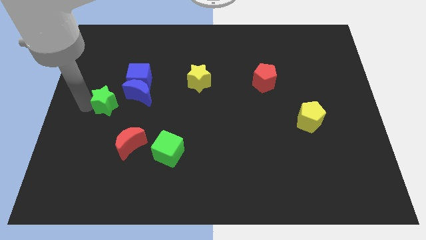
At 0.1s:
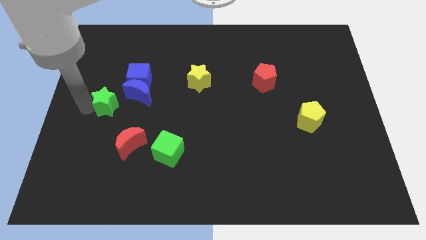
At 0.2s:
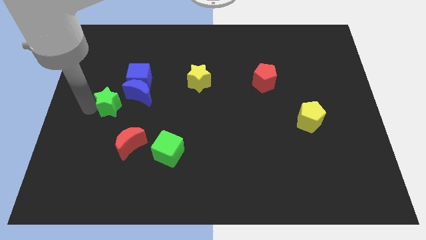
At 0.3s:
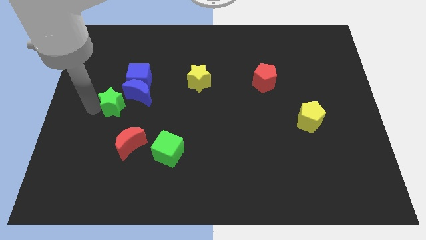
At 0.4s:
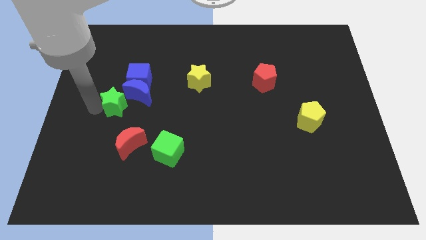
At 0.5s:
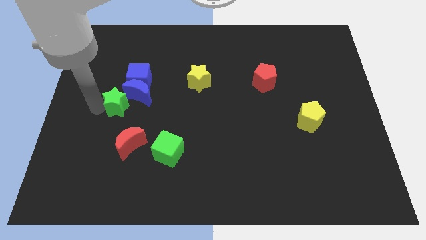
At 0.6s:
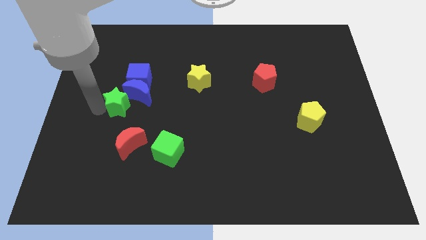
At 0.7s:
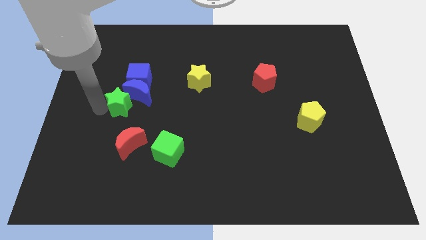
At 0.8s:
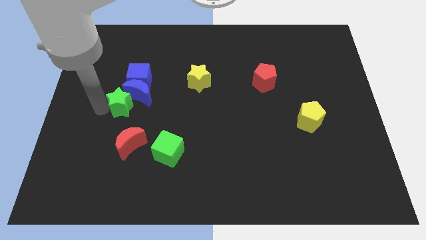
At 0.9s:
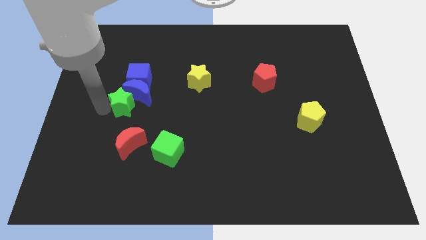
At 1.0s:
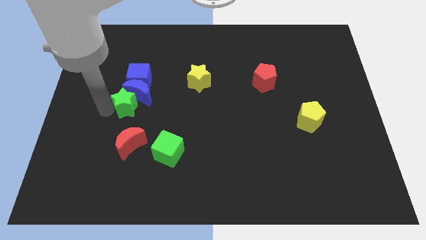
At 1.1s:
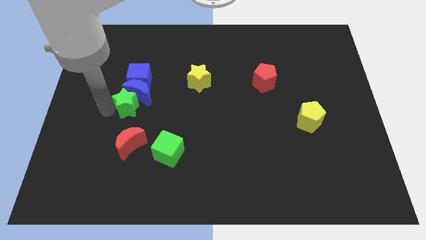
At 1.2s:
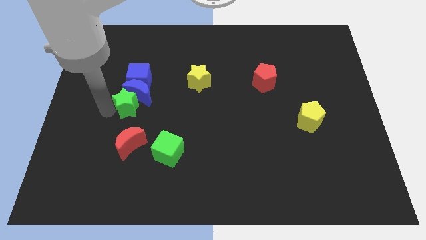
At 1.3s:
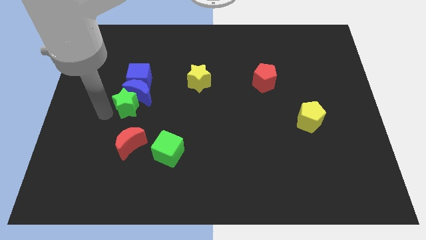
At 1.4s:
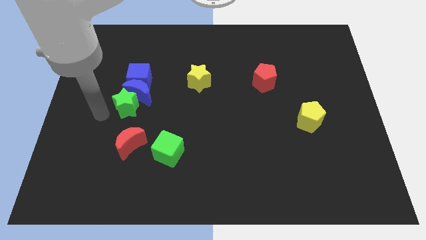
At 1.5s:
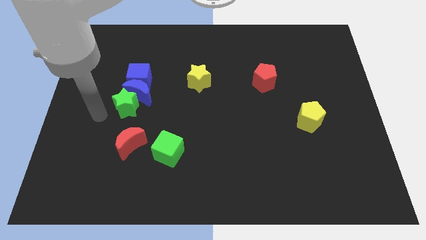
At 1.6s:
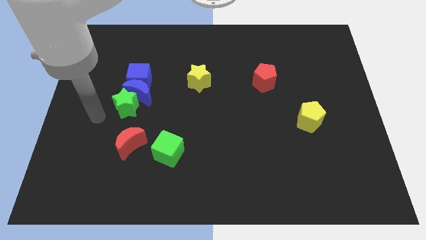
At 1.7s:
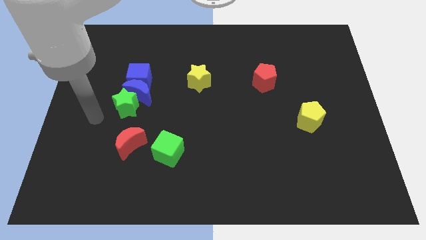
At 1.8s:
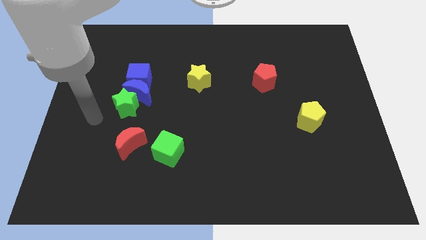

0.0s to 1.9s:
place the green star below the blue crescent

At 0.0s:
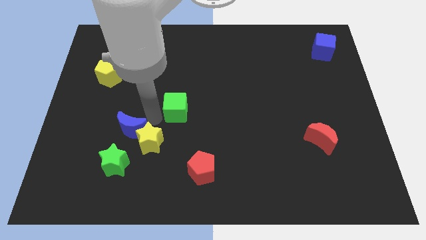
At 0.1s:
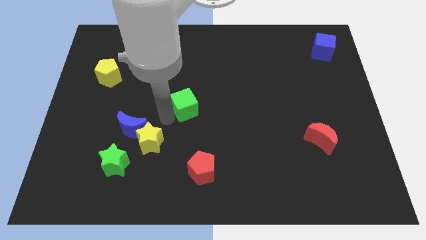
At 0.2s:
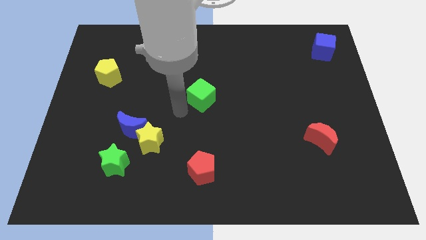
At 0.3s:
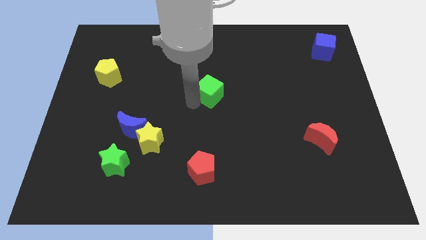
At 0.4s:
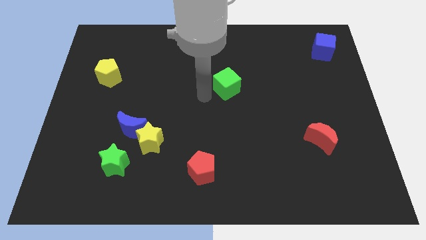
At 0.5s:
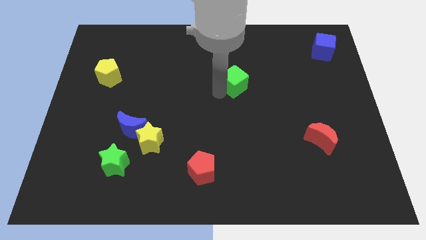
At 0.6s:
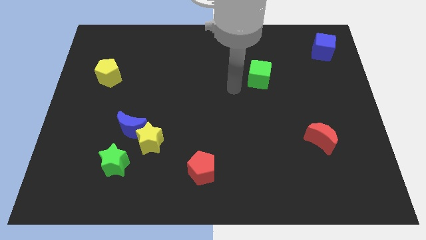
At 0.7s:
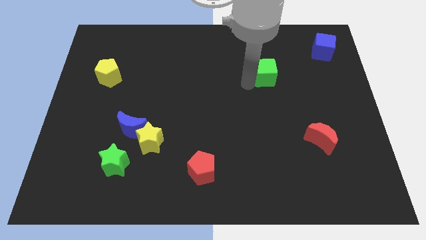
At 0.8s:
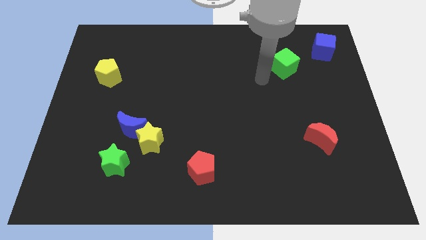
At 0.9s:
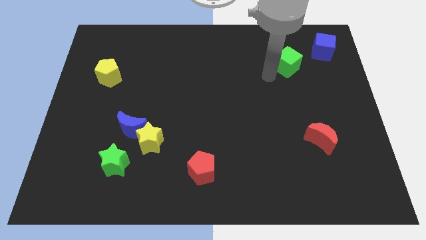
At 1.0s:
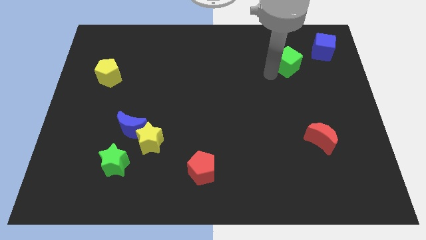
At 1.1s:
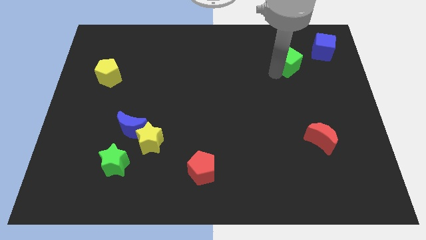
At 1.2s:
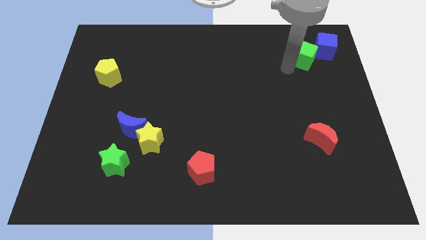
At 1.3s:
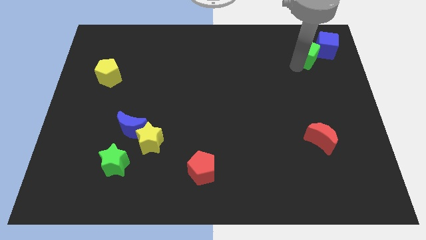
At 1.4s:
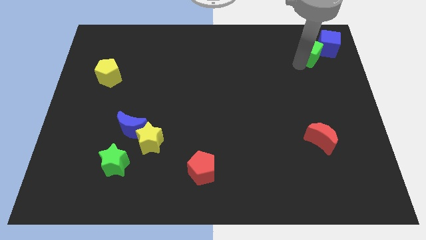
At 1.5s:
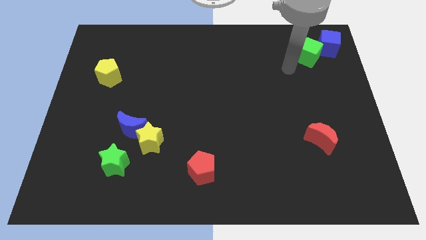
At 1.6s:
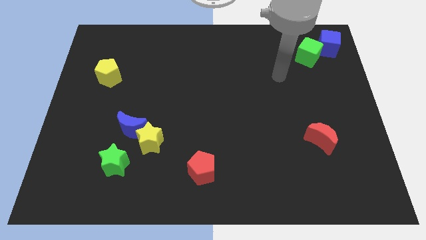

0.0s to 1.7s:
move the green cube to the top right of the board

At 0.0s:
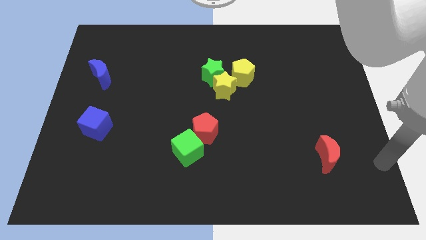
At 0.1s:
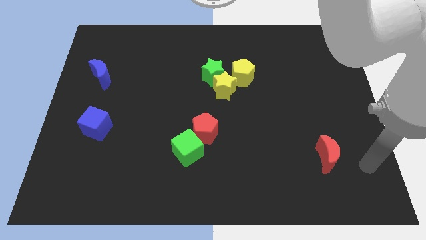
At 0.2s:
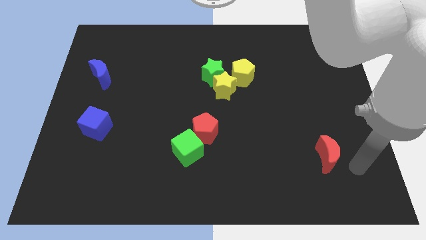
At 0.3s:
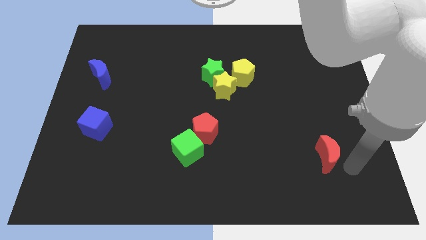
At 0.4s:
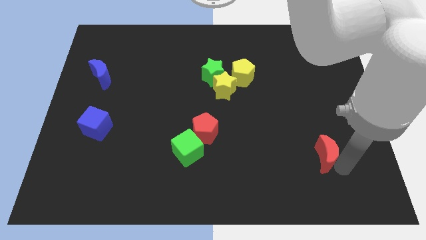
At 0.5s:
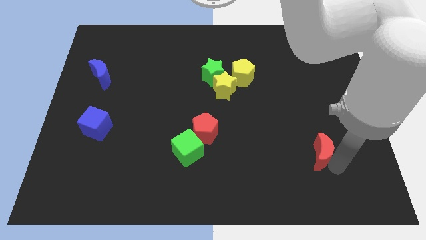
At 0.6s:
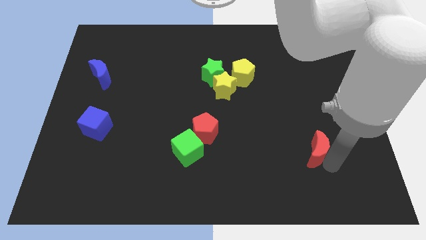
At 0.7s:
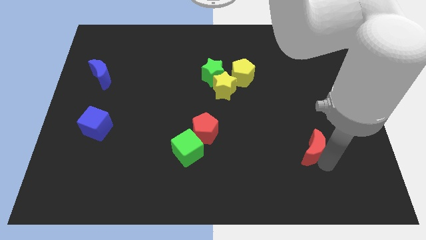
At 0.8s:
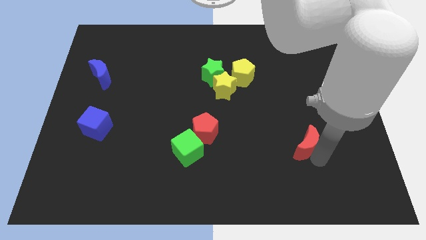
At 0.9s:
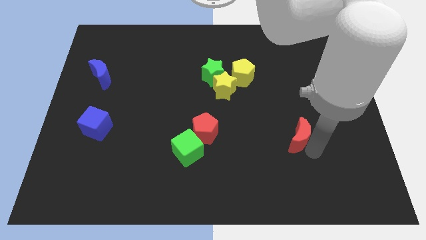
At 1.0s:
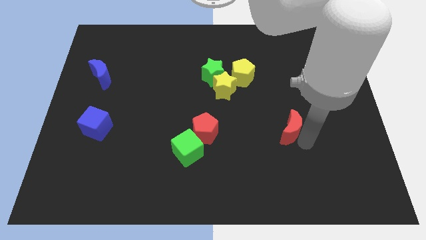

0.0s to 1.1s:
place the red moon parallel to red pentagon

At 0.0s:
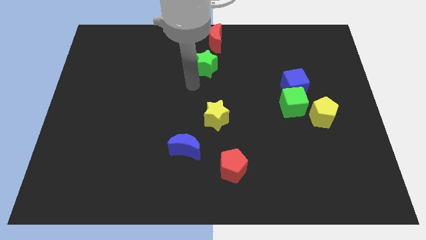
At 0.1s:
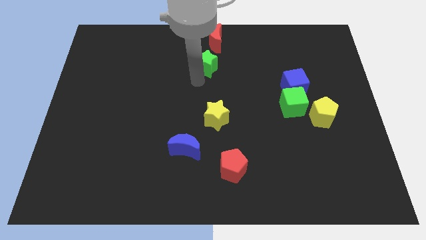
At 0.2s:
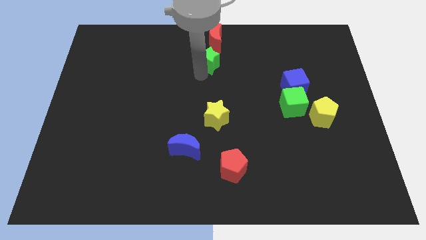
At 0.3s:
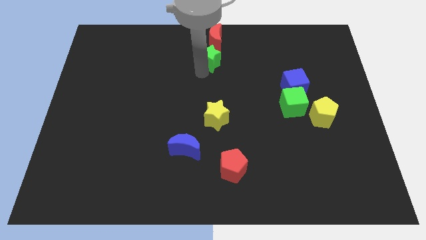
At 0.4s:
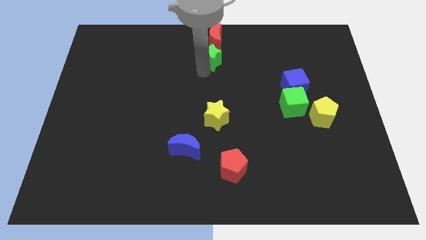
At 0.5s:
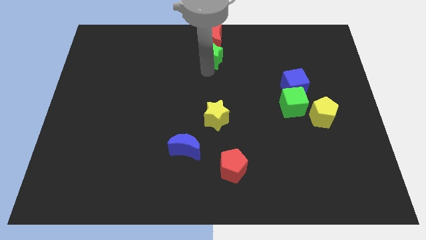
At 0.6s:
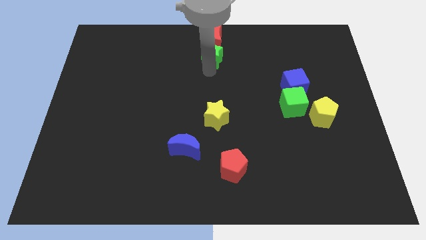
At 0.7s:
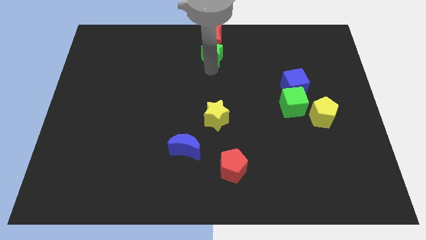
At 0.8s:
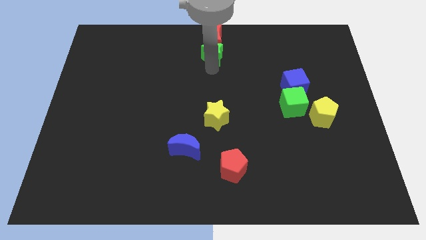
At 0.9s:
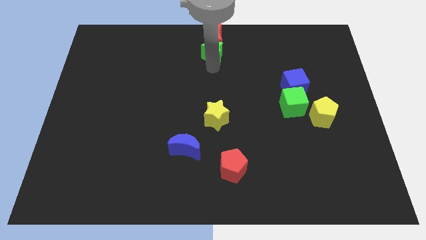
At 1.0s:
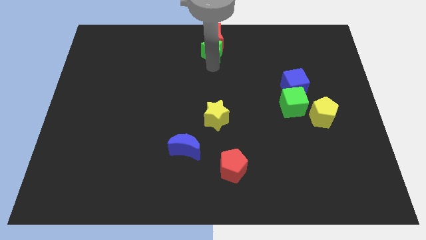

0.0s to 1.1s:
push green star into red crescent

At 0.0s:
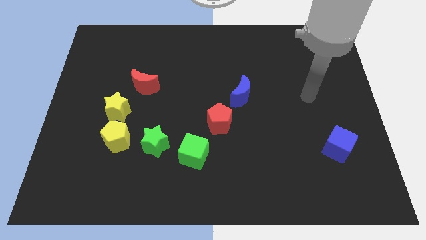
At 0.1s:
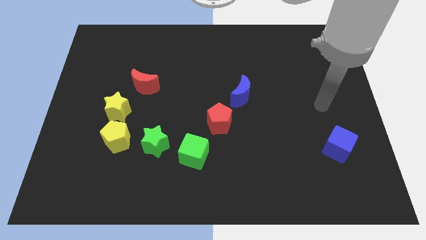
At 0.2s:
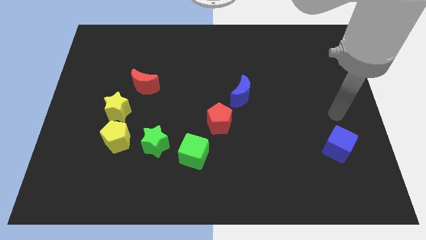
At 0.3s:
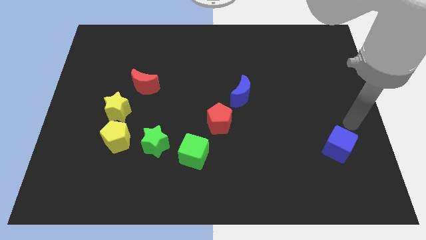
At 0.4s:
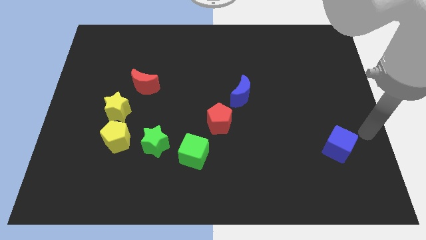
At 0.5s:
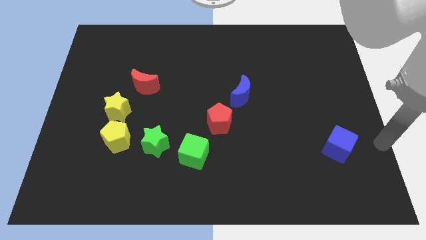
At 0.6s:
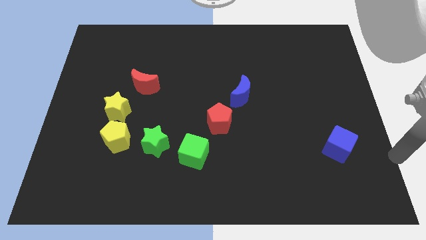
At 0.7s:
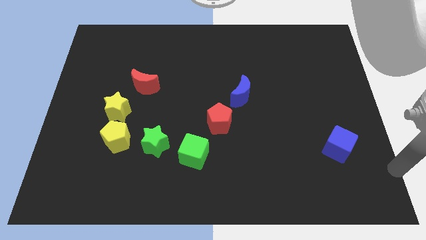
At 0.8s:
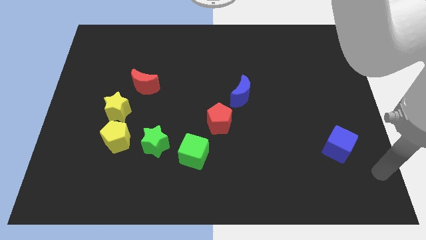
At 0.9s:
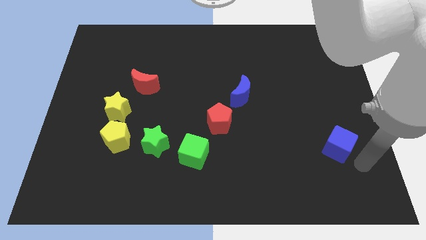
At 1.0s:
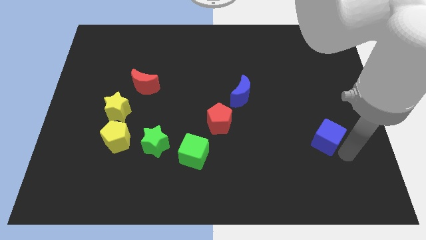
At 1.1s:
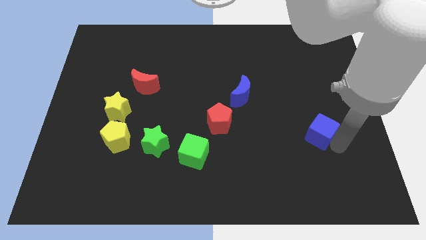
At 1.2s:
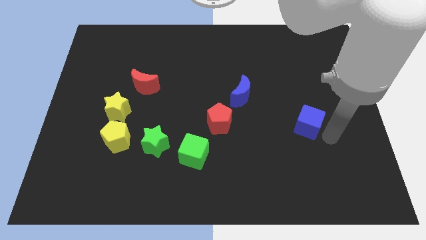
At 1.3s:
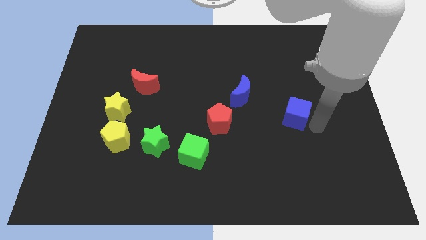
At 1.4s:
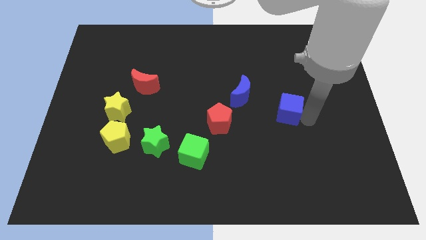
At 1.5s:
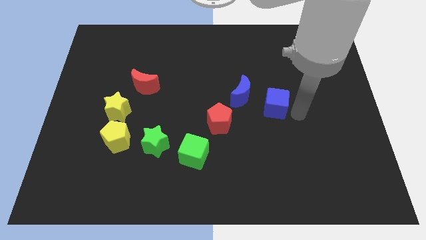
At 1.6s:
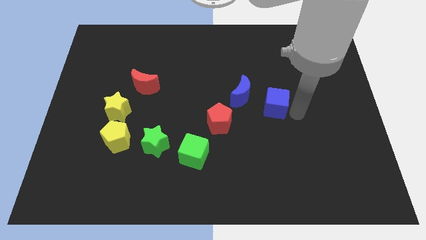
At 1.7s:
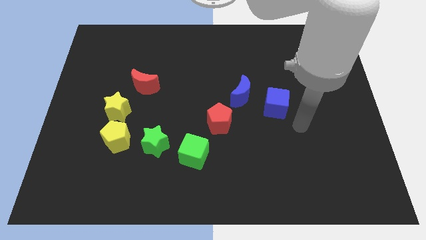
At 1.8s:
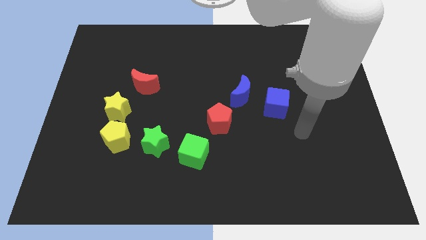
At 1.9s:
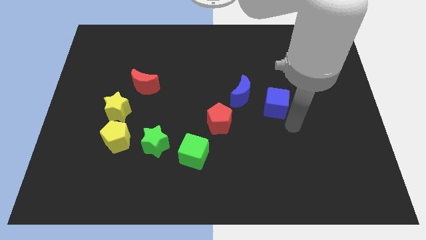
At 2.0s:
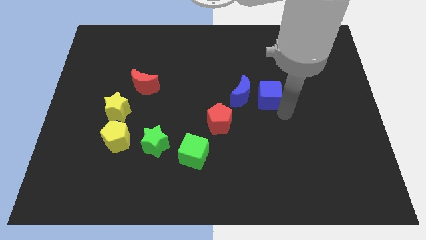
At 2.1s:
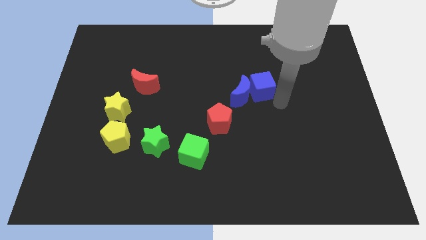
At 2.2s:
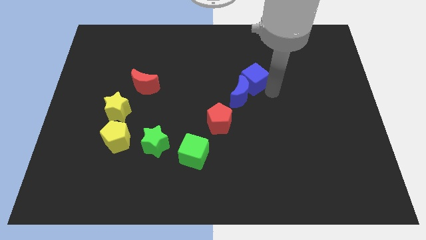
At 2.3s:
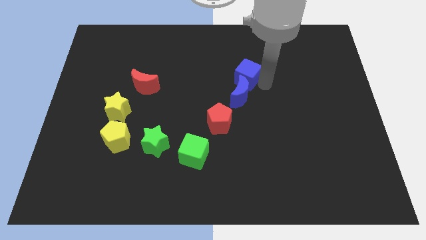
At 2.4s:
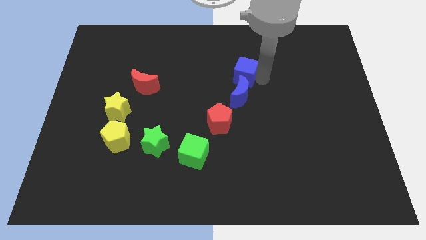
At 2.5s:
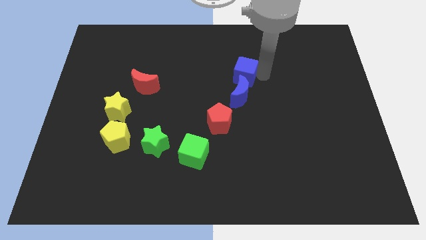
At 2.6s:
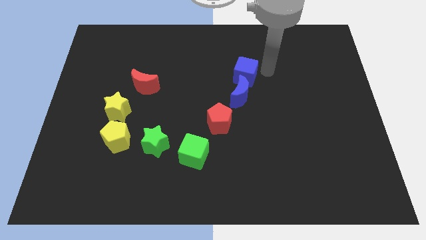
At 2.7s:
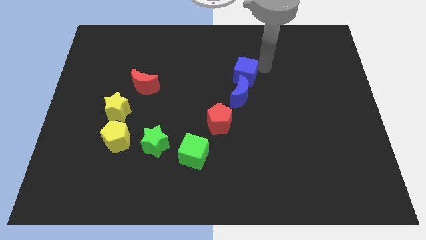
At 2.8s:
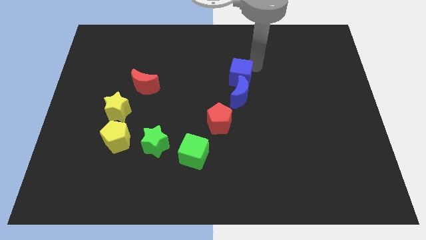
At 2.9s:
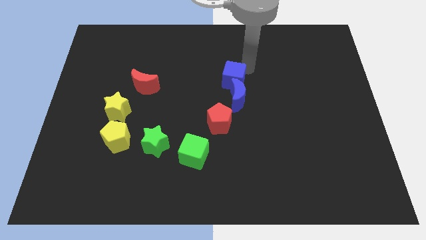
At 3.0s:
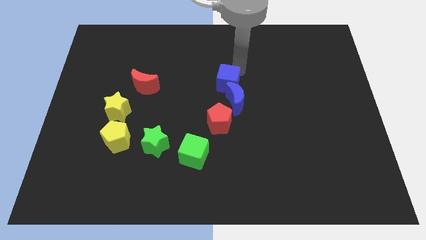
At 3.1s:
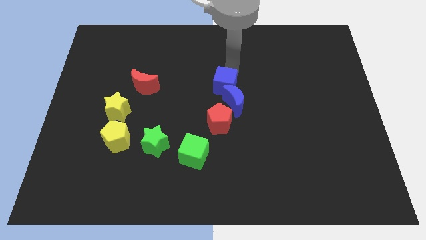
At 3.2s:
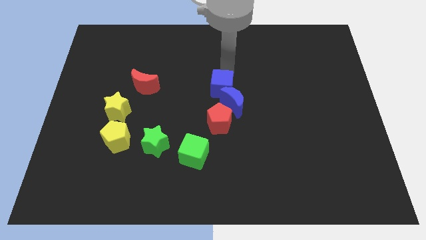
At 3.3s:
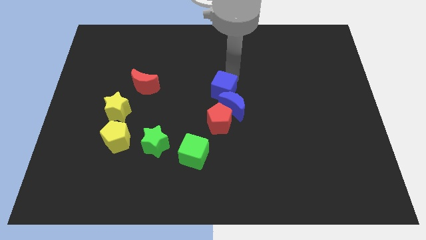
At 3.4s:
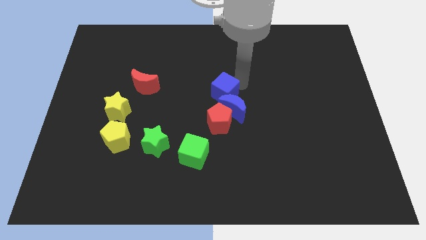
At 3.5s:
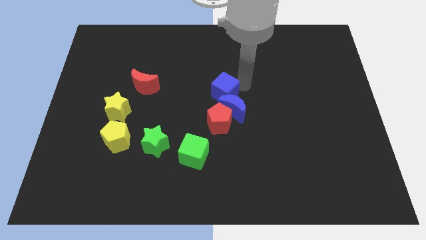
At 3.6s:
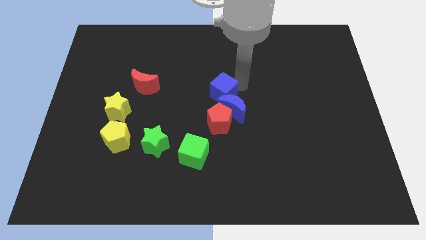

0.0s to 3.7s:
move the blue cube on the top of blue moon
